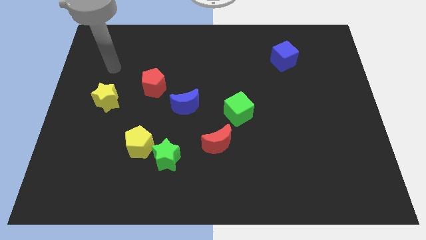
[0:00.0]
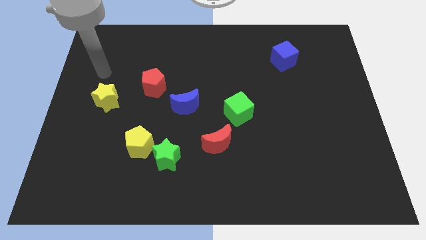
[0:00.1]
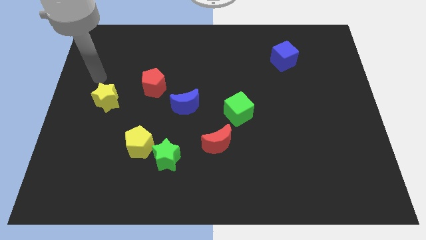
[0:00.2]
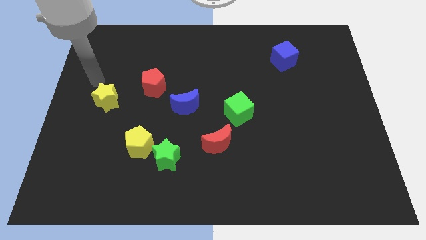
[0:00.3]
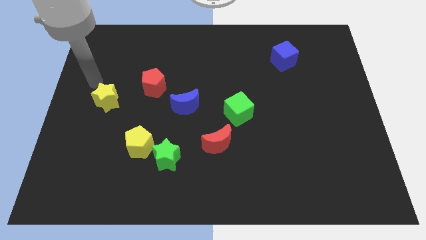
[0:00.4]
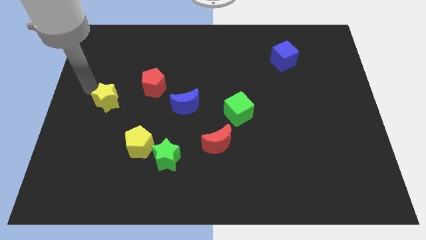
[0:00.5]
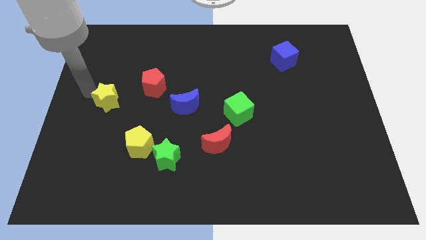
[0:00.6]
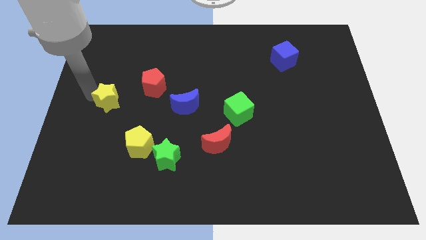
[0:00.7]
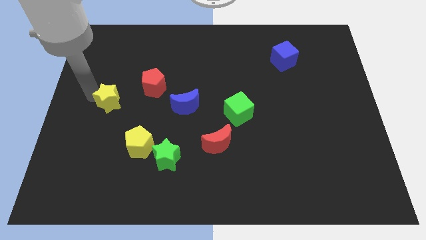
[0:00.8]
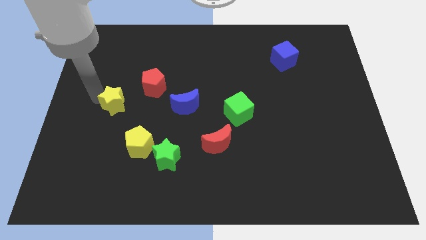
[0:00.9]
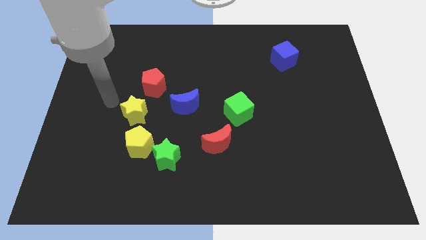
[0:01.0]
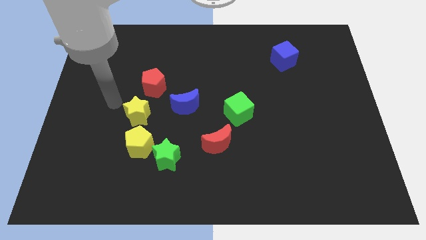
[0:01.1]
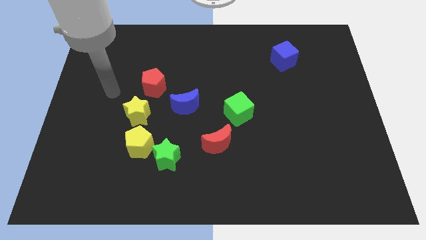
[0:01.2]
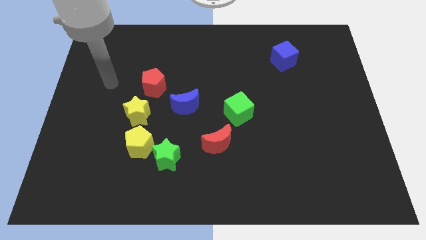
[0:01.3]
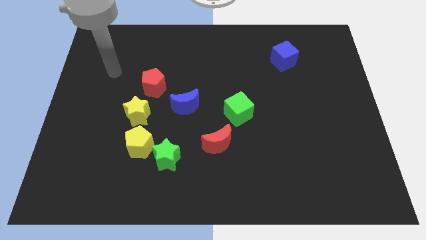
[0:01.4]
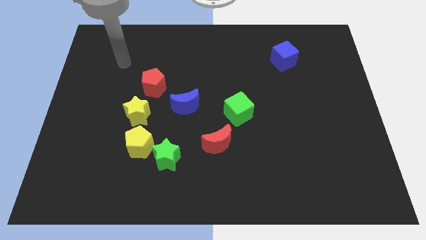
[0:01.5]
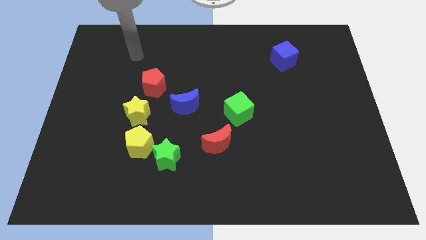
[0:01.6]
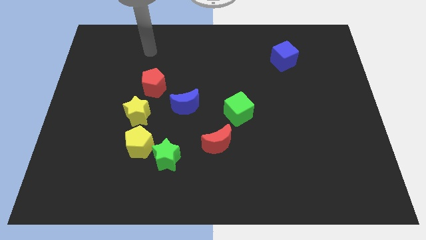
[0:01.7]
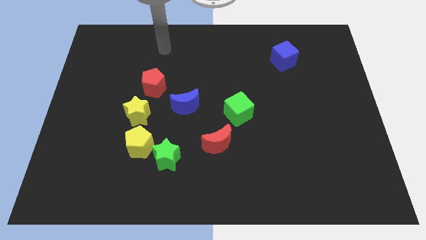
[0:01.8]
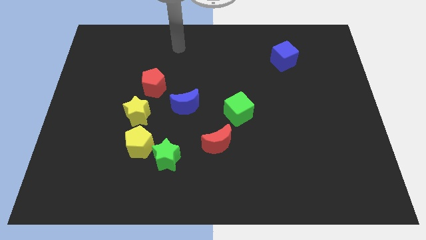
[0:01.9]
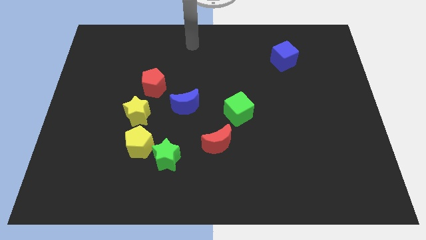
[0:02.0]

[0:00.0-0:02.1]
move the yellow star vertically above the yellow pentagon

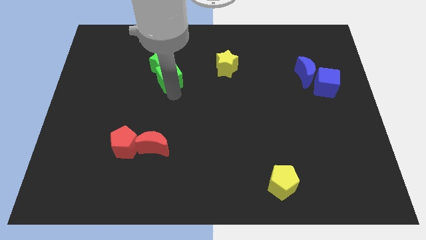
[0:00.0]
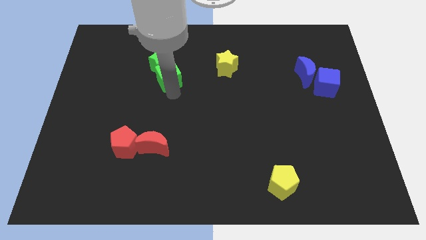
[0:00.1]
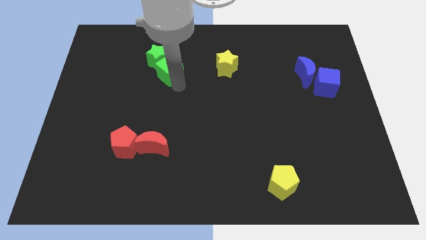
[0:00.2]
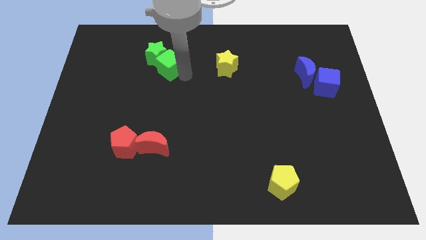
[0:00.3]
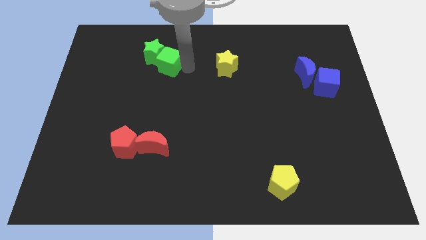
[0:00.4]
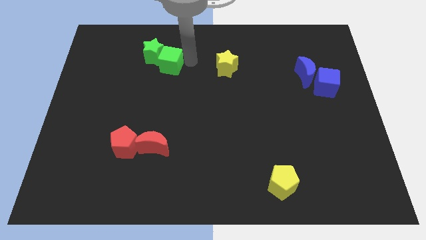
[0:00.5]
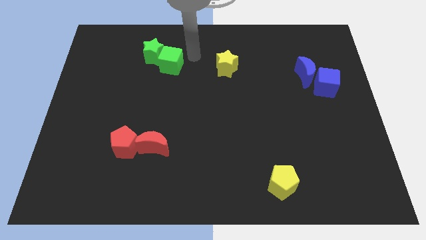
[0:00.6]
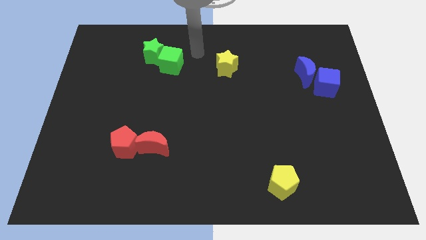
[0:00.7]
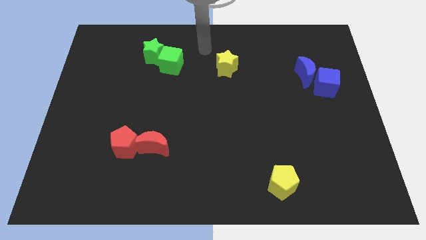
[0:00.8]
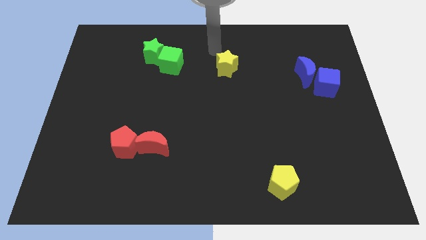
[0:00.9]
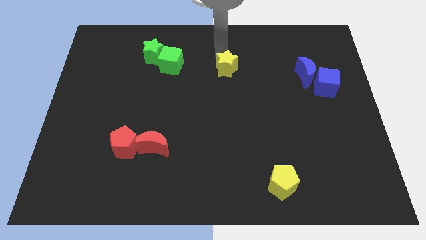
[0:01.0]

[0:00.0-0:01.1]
place arm above the yellow star

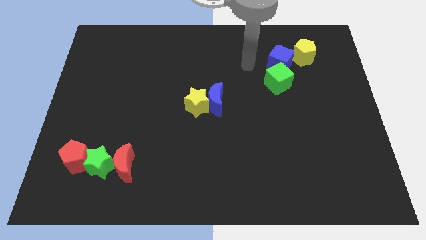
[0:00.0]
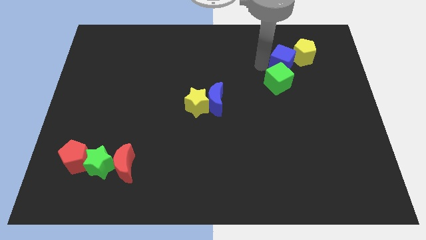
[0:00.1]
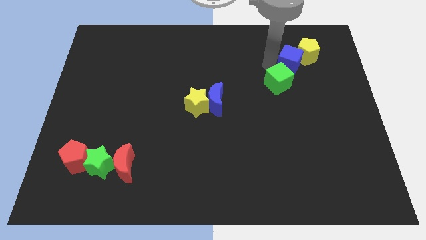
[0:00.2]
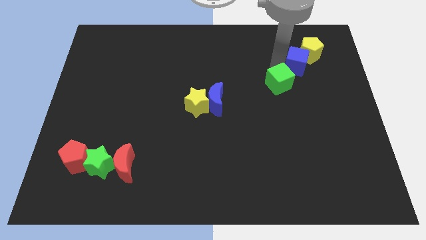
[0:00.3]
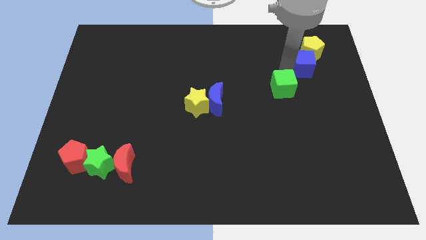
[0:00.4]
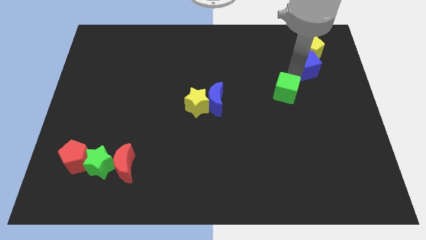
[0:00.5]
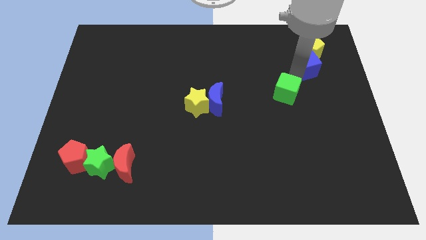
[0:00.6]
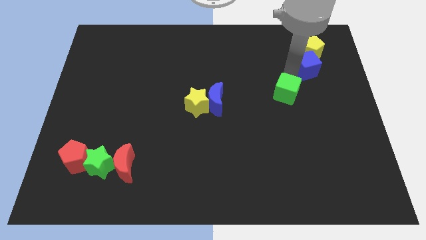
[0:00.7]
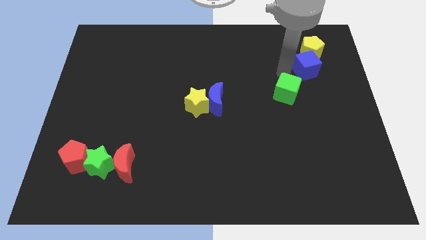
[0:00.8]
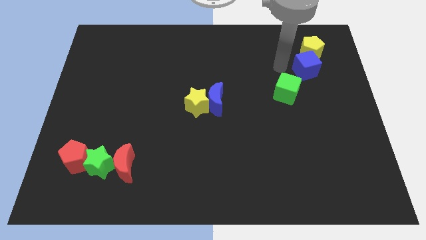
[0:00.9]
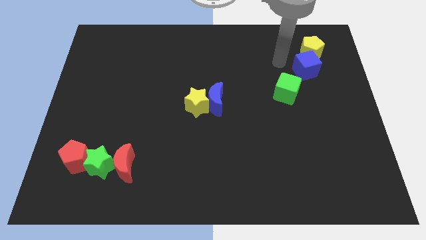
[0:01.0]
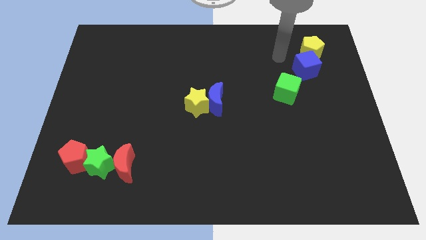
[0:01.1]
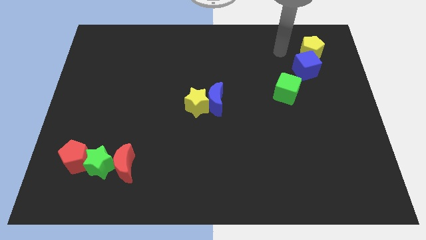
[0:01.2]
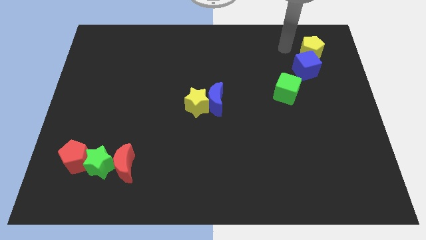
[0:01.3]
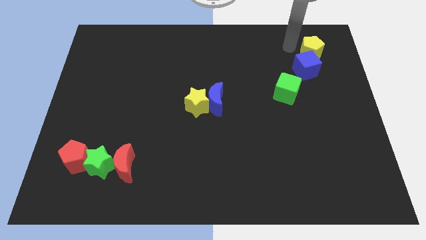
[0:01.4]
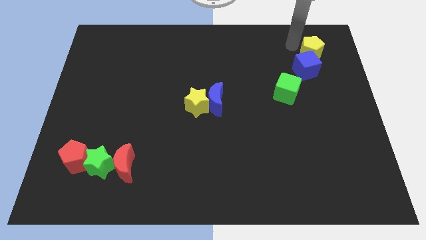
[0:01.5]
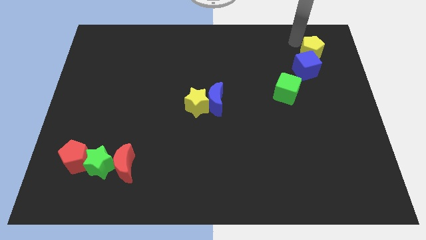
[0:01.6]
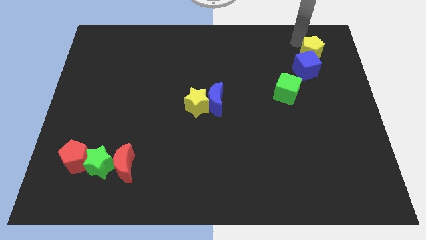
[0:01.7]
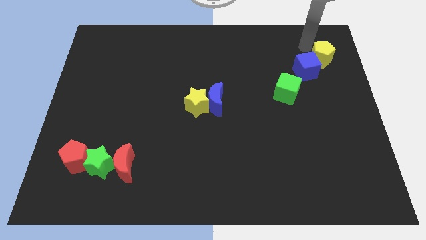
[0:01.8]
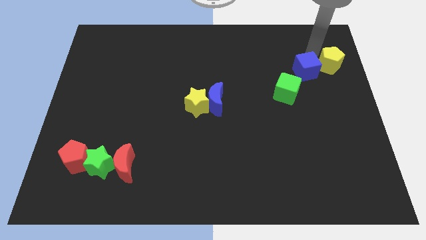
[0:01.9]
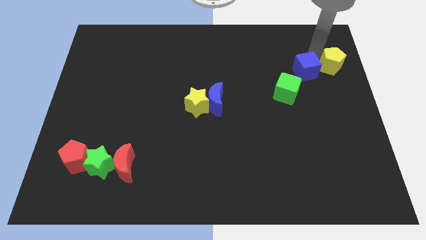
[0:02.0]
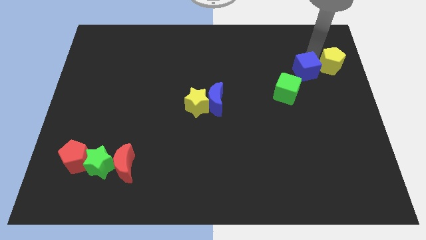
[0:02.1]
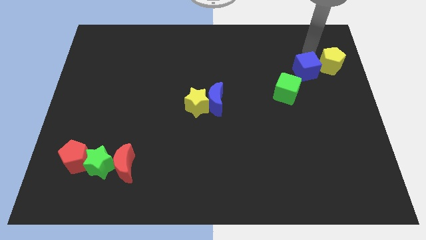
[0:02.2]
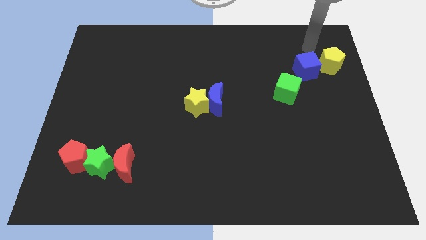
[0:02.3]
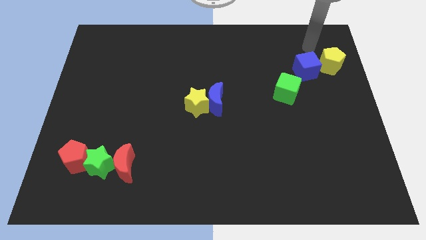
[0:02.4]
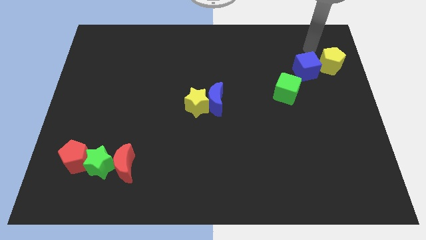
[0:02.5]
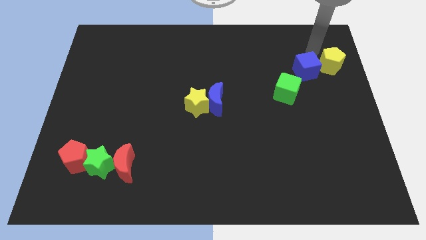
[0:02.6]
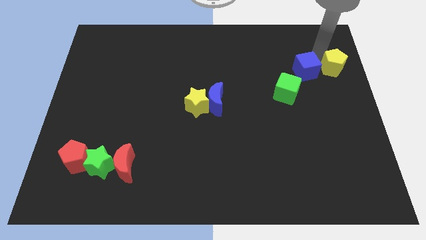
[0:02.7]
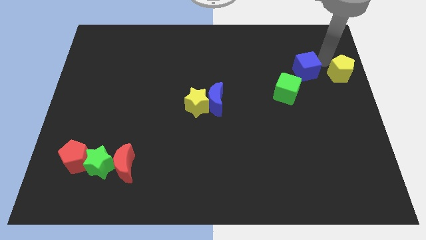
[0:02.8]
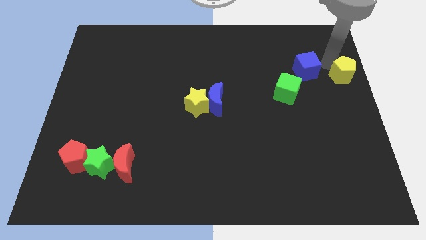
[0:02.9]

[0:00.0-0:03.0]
place the yellow pentagon at the right side of the blue cube

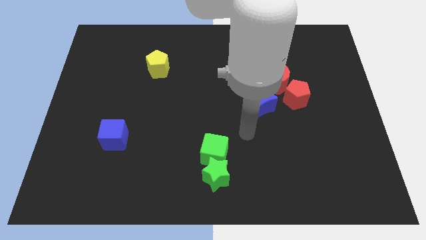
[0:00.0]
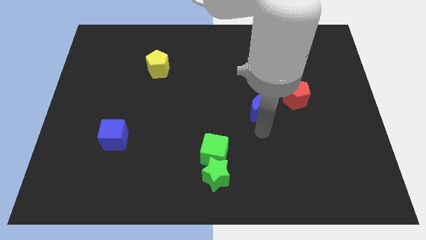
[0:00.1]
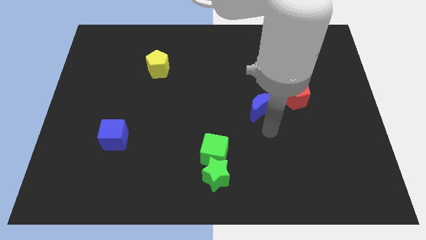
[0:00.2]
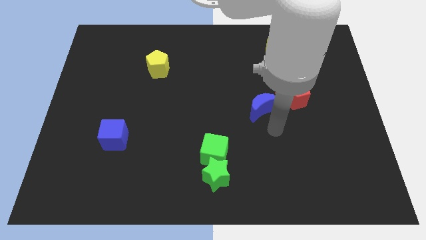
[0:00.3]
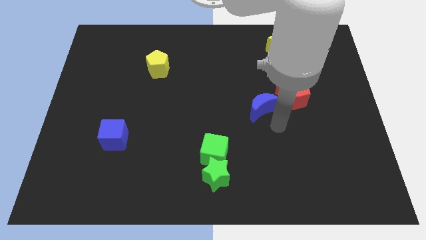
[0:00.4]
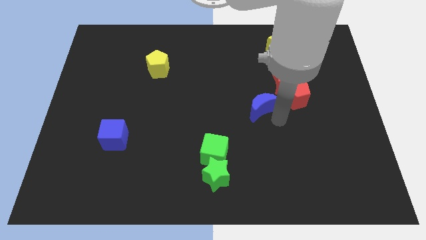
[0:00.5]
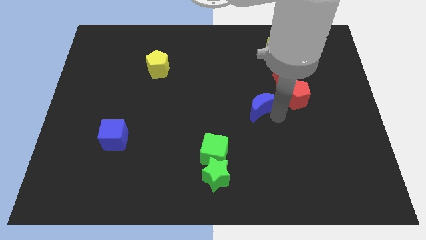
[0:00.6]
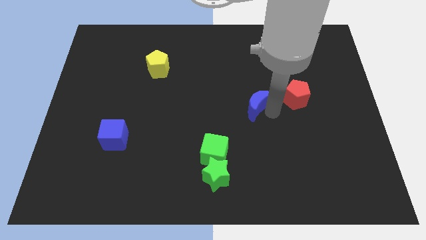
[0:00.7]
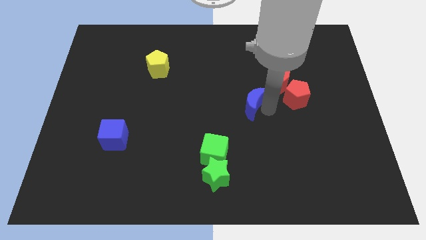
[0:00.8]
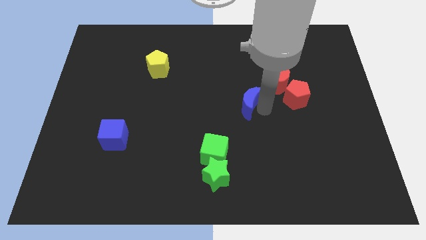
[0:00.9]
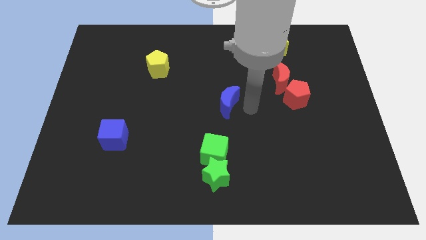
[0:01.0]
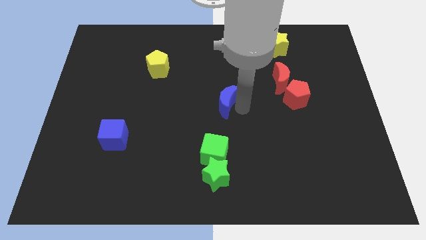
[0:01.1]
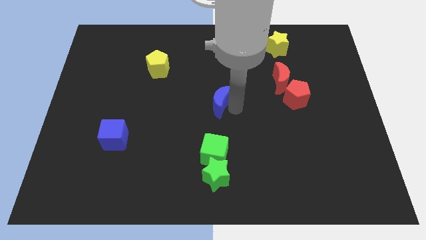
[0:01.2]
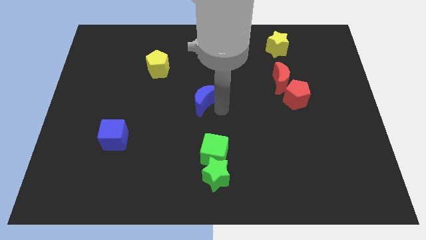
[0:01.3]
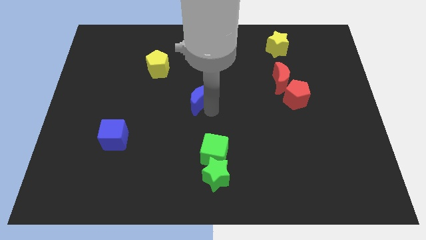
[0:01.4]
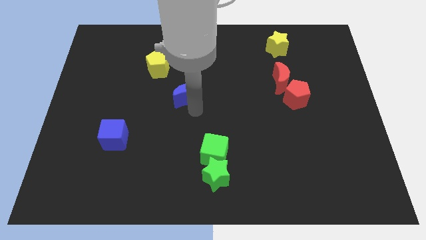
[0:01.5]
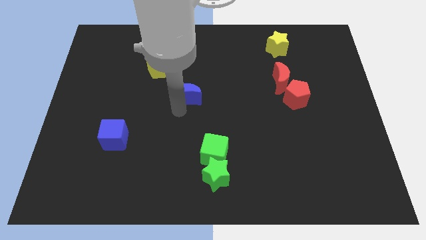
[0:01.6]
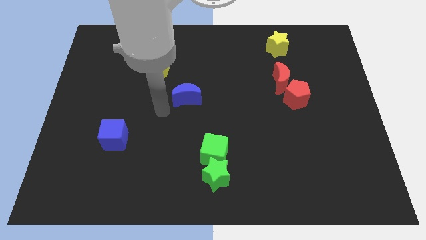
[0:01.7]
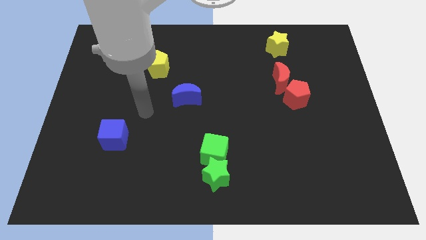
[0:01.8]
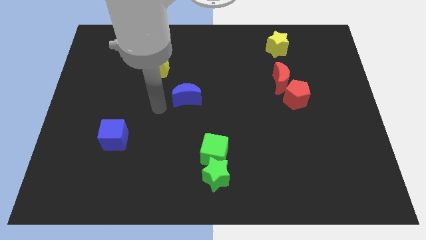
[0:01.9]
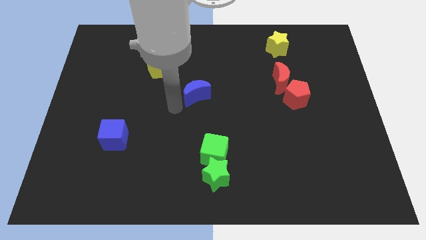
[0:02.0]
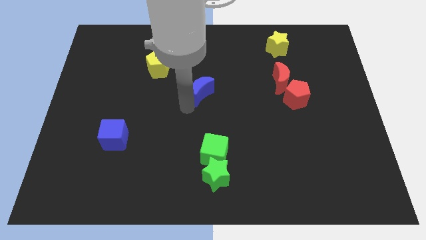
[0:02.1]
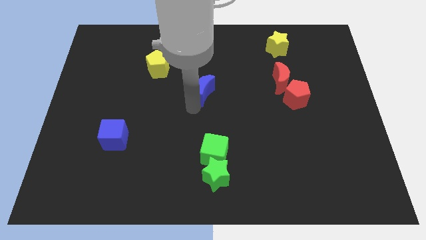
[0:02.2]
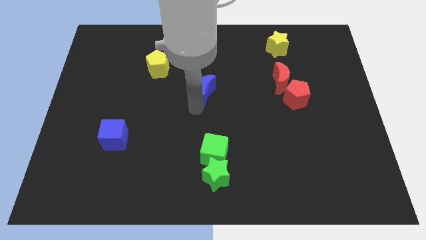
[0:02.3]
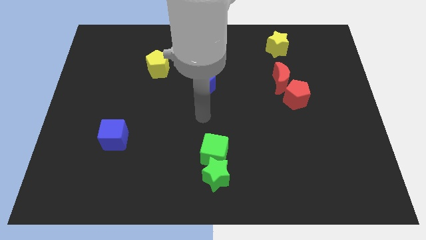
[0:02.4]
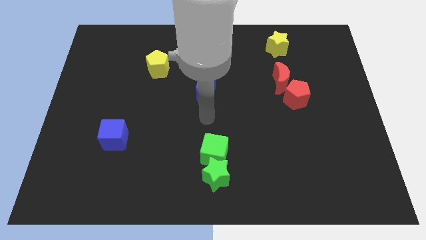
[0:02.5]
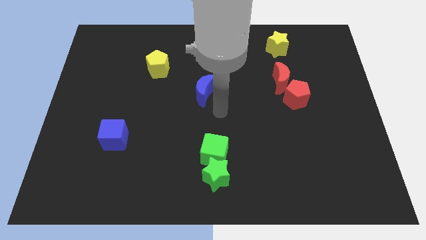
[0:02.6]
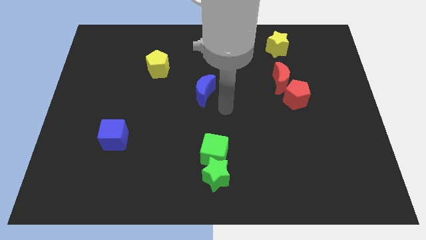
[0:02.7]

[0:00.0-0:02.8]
move the blue moon to the vertical top side of the green cube
